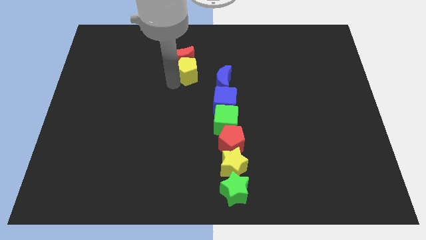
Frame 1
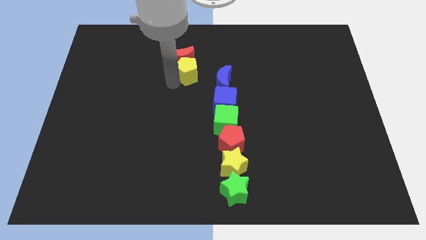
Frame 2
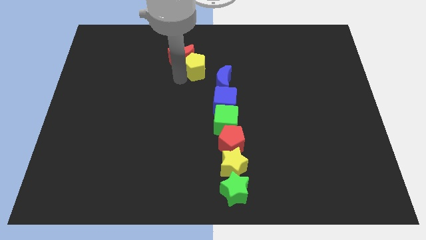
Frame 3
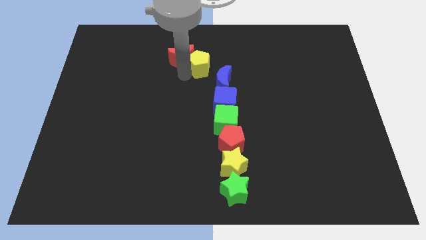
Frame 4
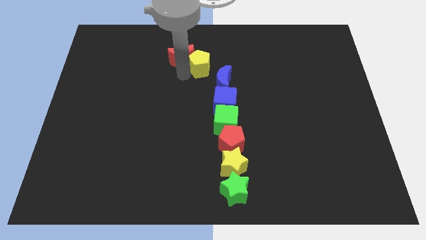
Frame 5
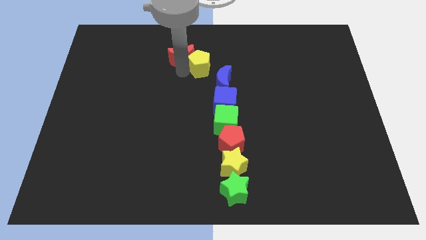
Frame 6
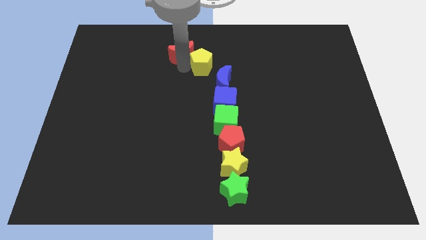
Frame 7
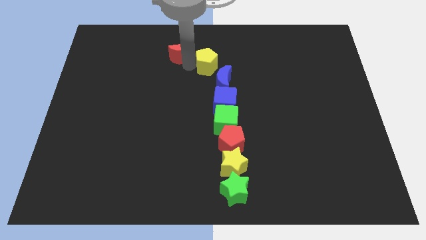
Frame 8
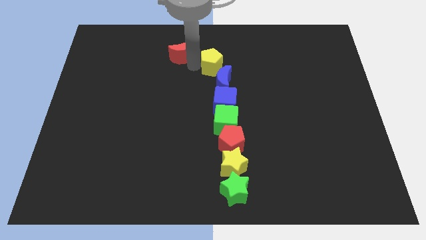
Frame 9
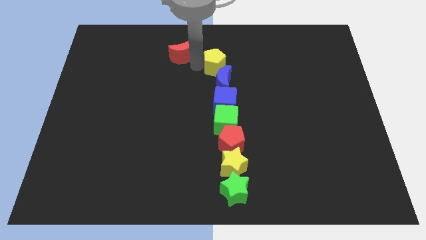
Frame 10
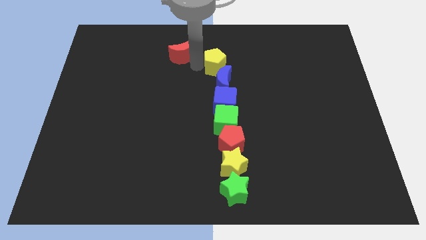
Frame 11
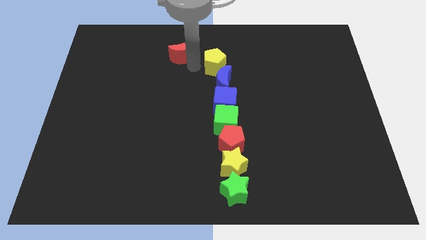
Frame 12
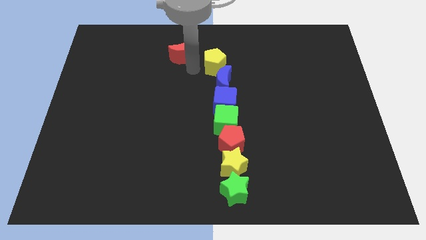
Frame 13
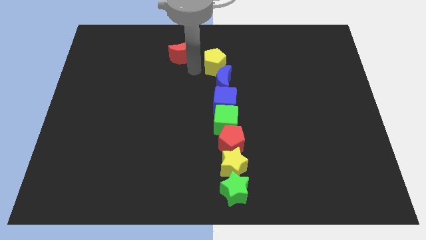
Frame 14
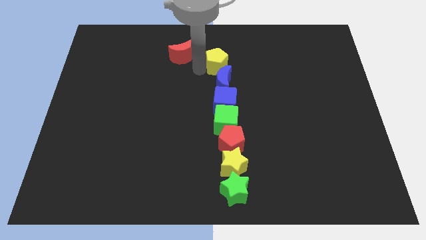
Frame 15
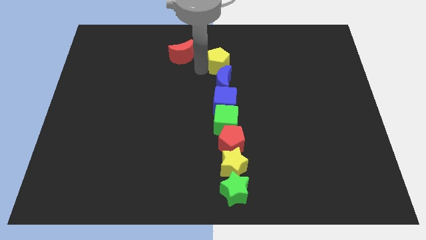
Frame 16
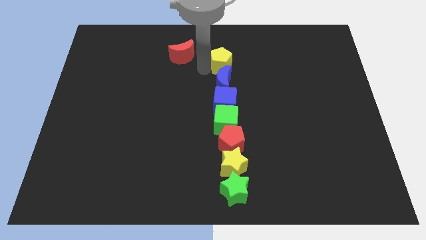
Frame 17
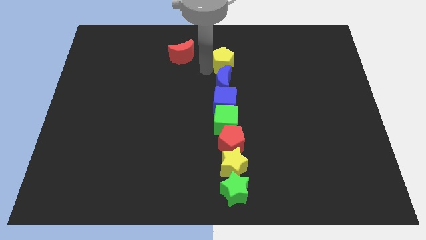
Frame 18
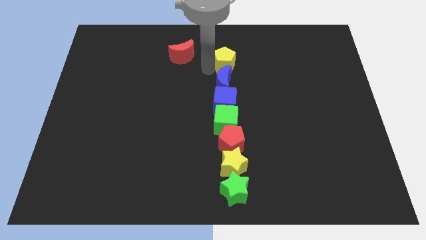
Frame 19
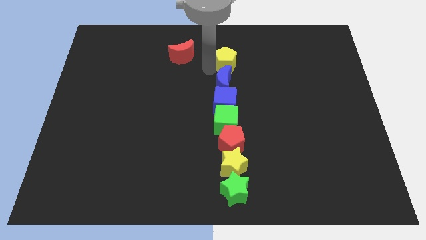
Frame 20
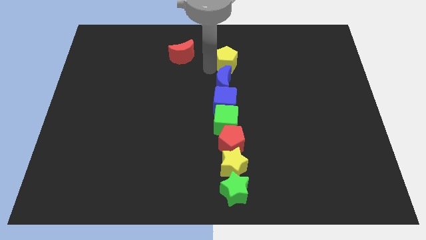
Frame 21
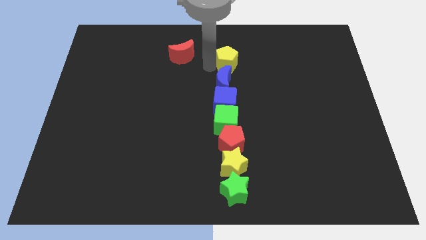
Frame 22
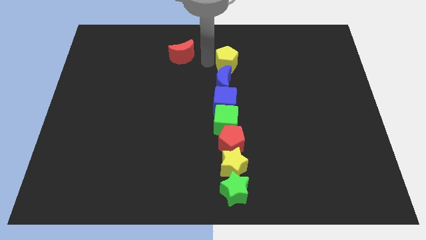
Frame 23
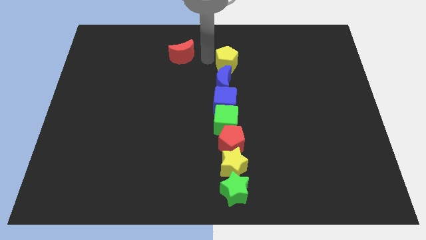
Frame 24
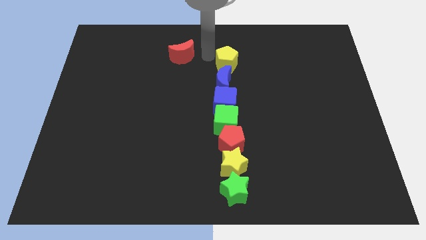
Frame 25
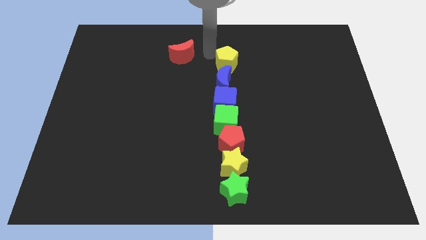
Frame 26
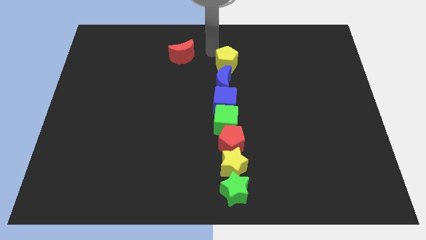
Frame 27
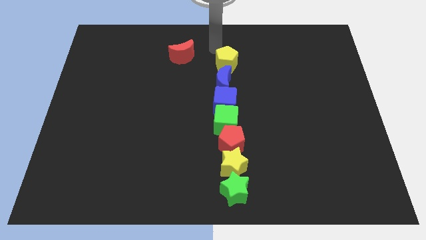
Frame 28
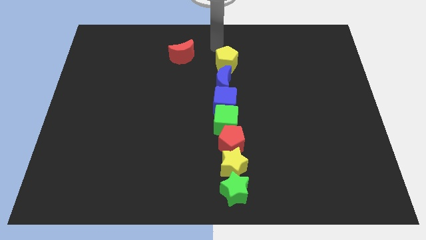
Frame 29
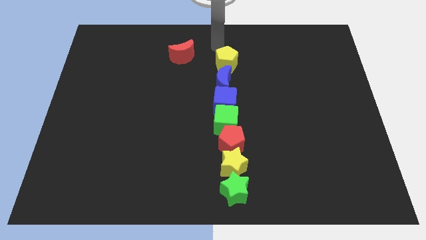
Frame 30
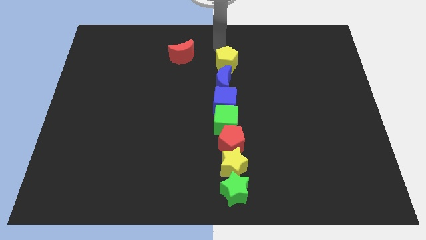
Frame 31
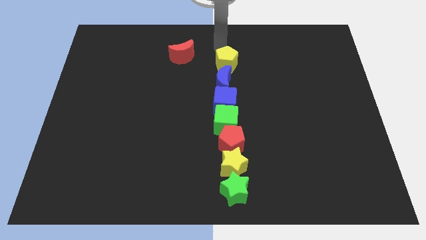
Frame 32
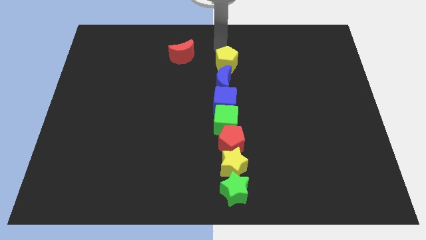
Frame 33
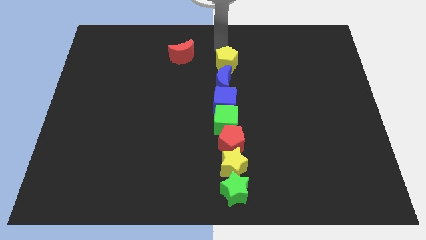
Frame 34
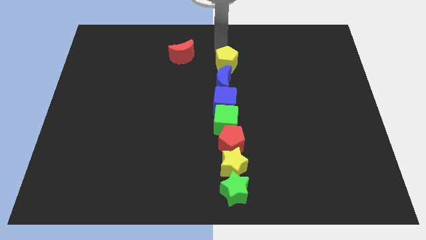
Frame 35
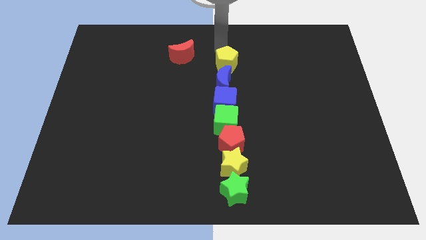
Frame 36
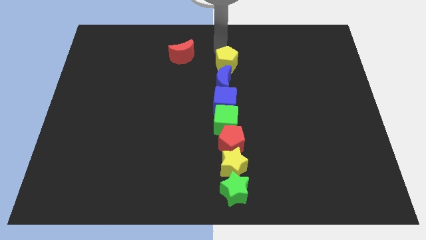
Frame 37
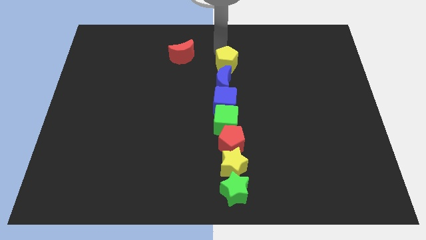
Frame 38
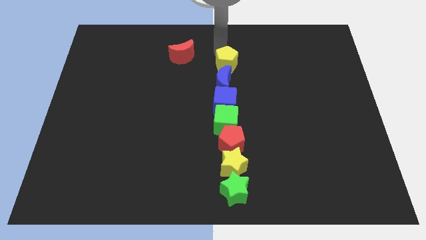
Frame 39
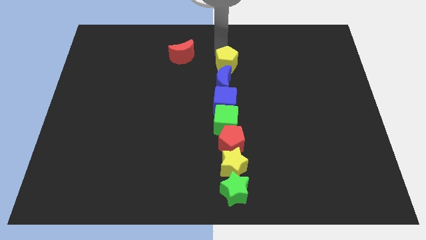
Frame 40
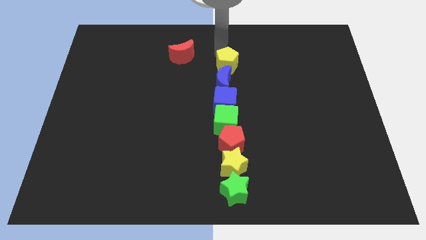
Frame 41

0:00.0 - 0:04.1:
place the yellow pentagon on the top of the blue moon

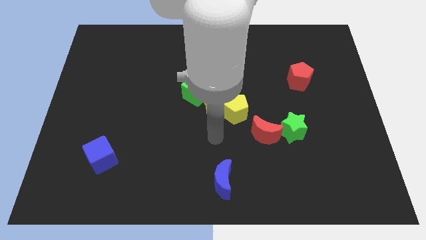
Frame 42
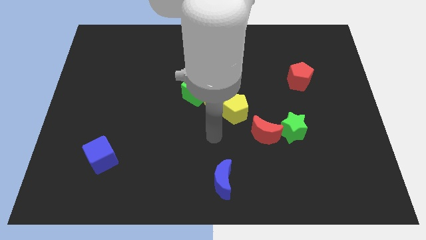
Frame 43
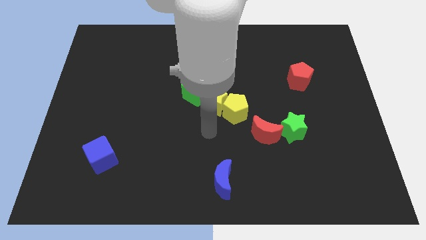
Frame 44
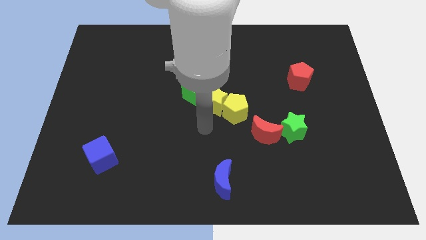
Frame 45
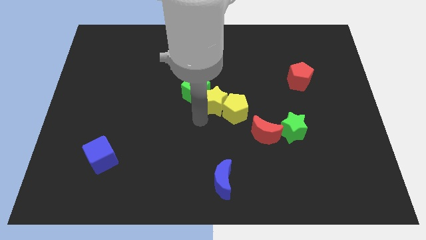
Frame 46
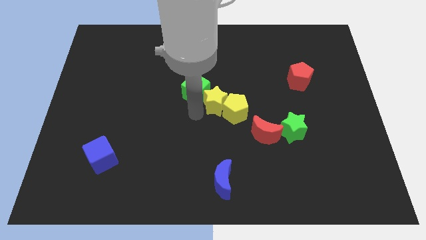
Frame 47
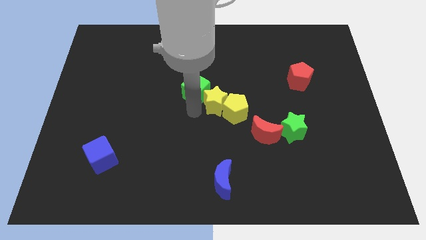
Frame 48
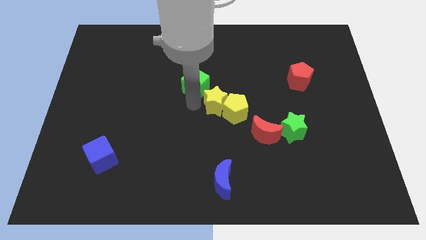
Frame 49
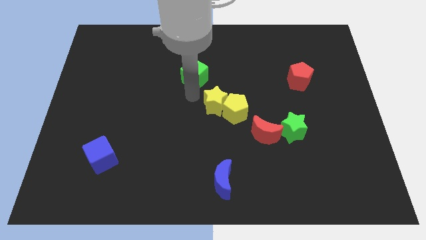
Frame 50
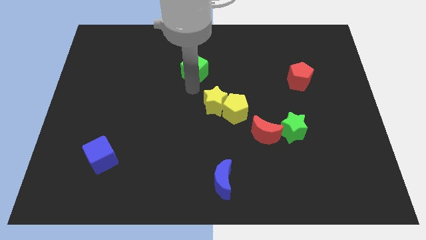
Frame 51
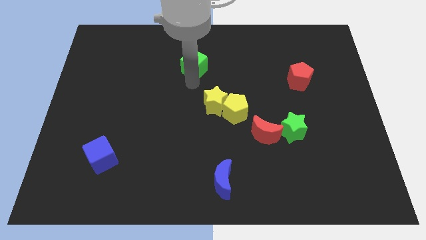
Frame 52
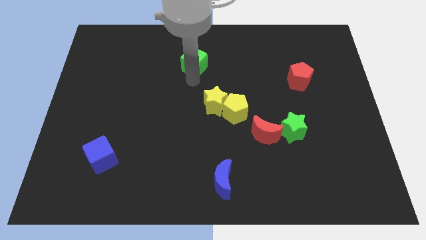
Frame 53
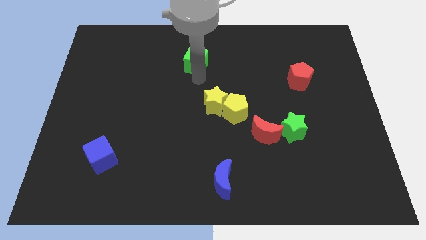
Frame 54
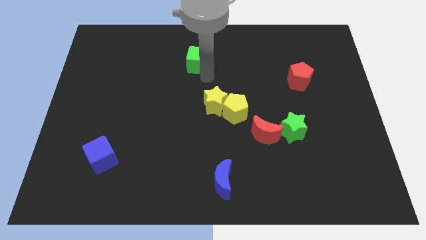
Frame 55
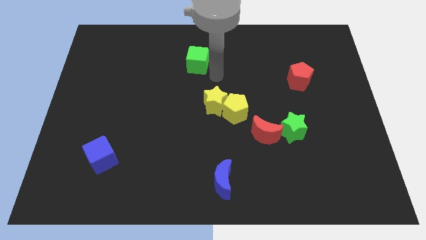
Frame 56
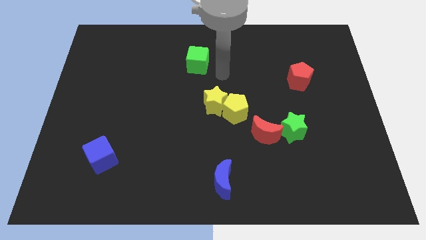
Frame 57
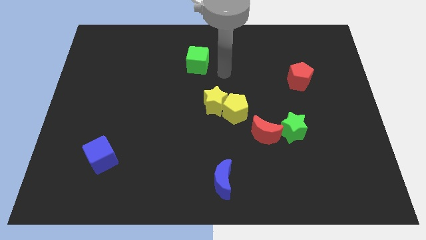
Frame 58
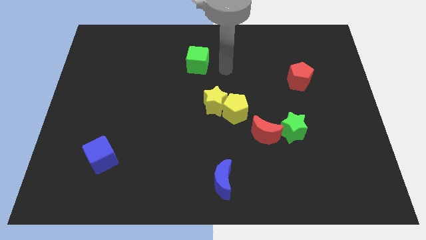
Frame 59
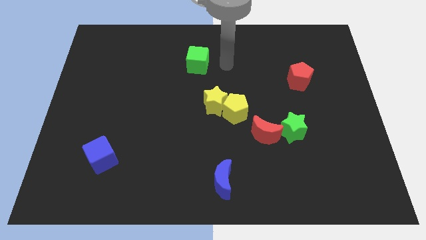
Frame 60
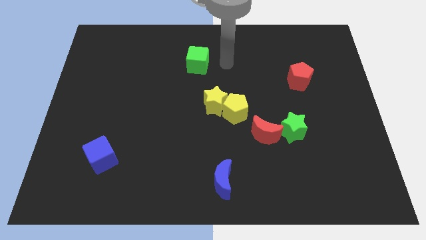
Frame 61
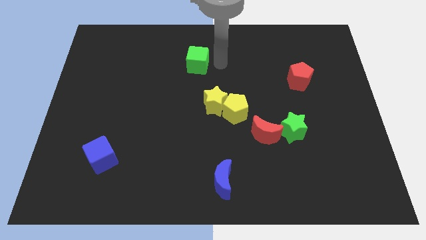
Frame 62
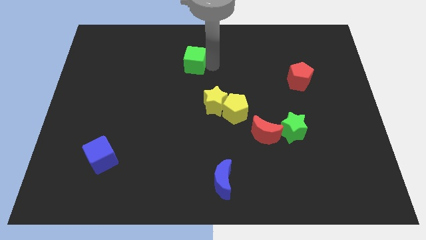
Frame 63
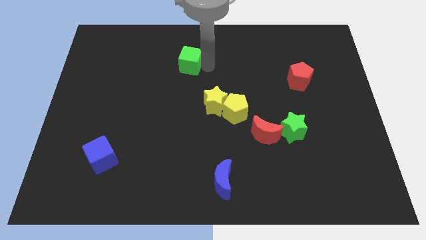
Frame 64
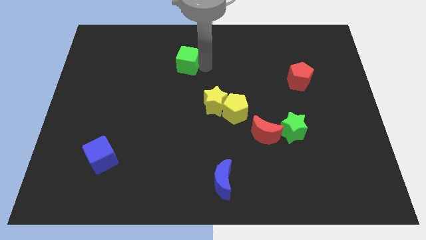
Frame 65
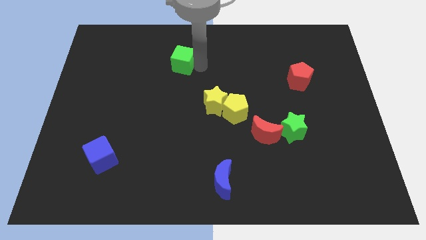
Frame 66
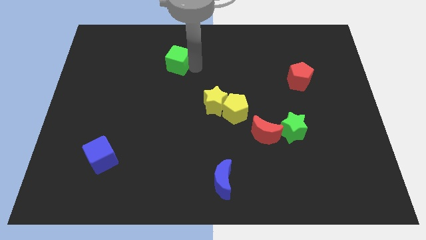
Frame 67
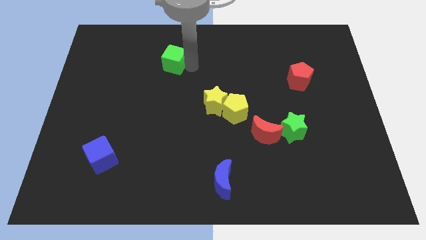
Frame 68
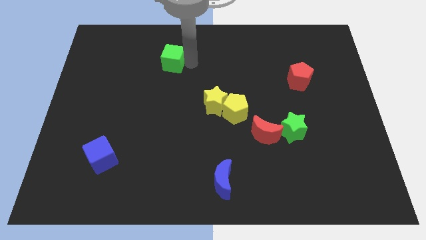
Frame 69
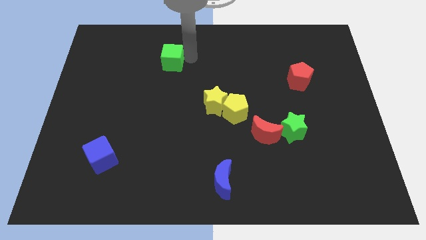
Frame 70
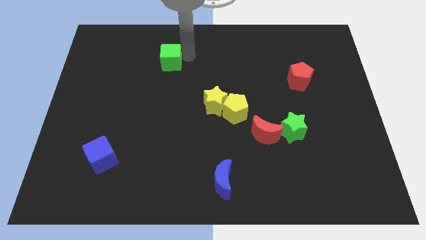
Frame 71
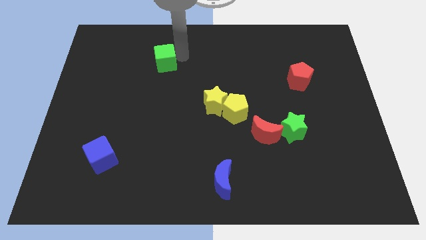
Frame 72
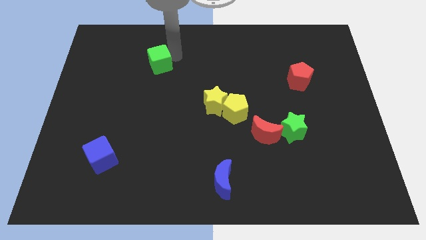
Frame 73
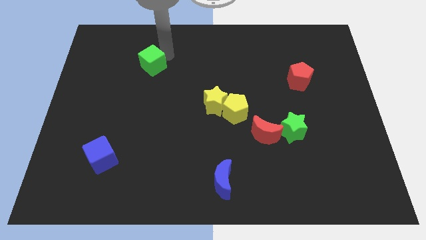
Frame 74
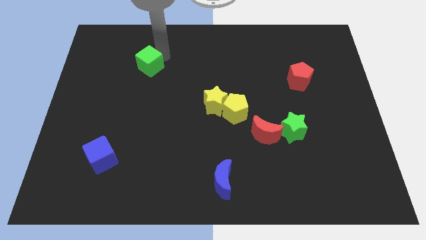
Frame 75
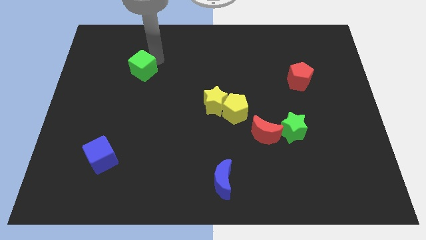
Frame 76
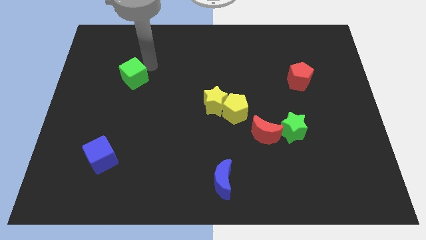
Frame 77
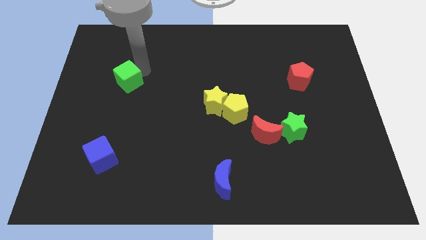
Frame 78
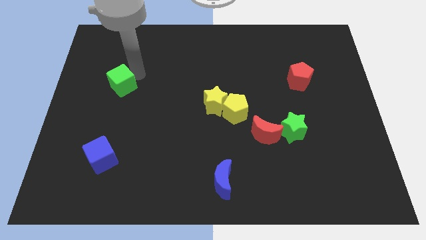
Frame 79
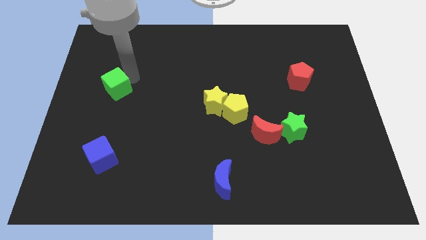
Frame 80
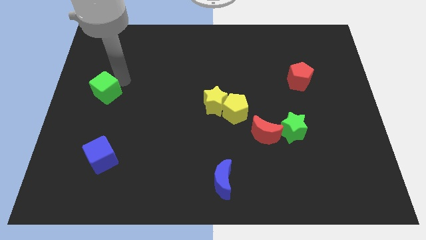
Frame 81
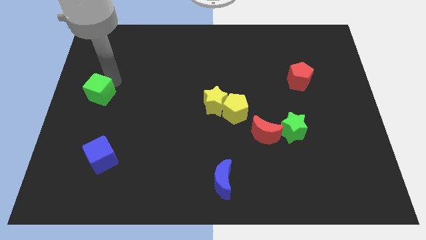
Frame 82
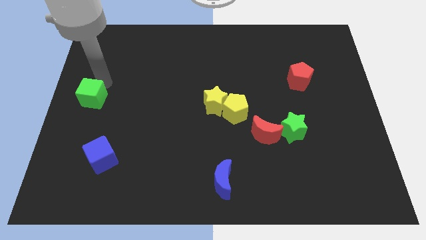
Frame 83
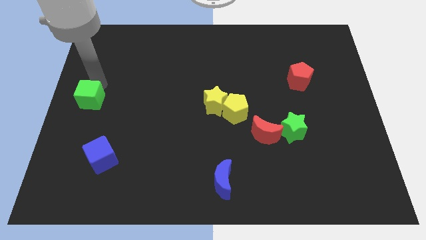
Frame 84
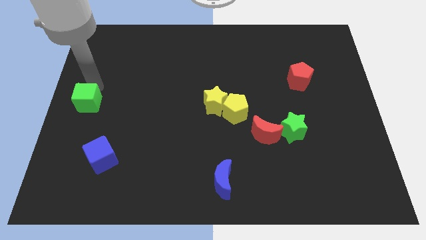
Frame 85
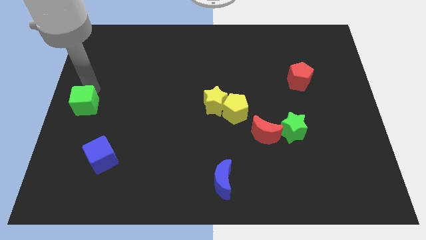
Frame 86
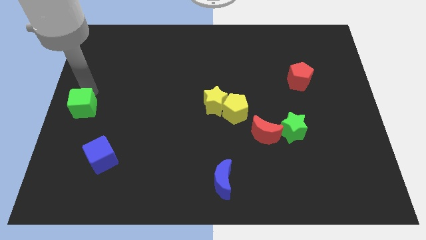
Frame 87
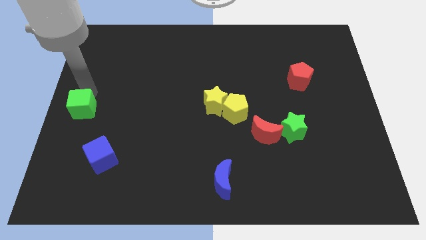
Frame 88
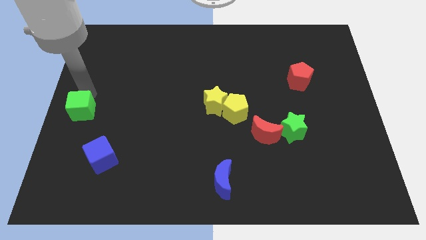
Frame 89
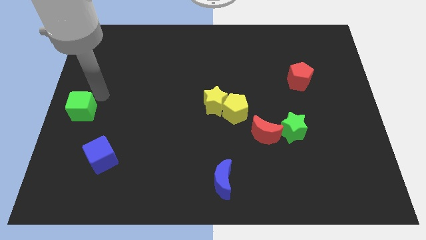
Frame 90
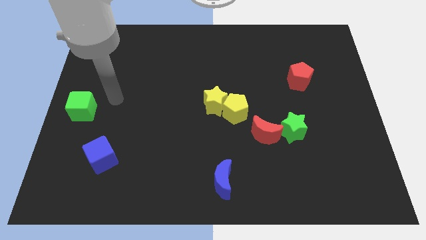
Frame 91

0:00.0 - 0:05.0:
move the green cube to the center lefdt of the table
